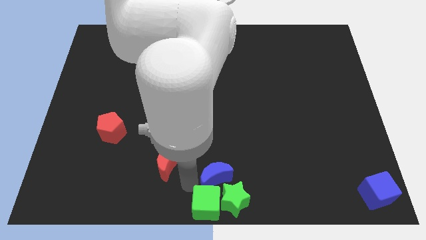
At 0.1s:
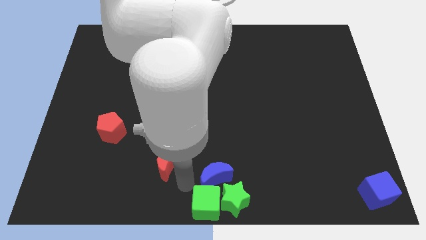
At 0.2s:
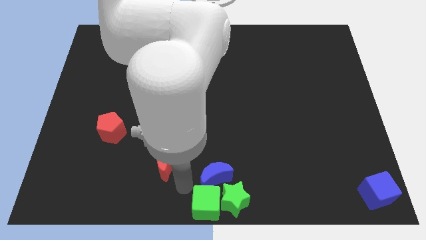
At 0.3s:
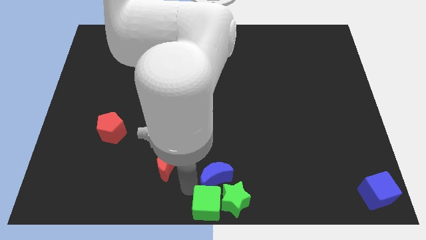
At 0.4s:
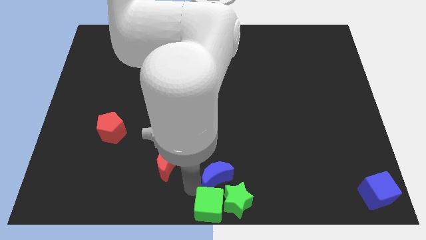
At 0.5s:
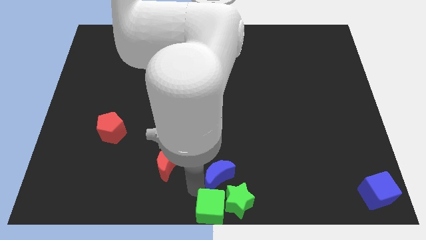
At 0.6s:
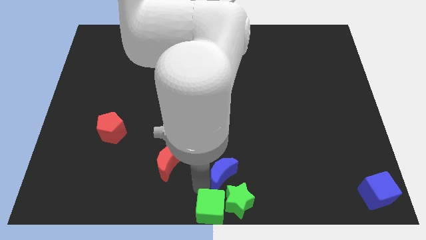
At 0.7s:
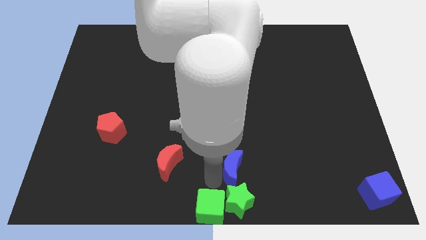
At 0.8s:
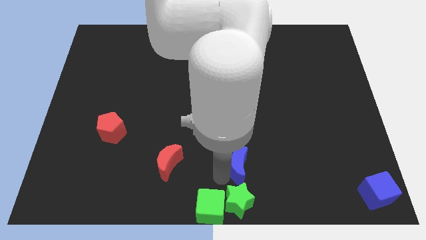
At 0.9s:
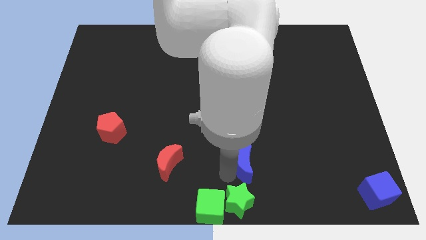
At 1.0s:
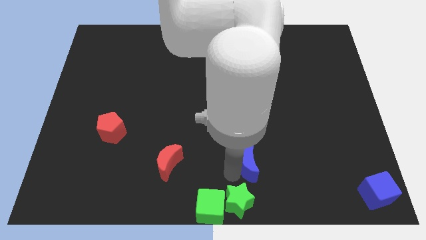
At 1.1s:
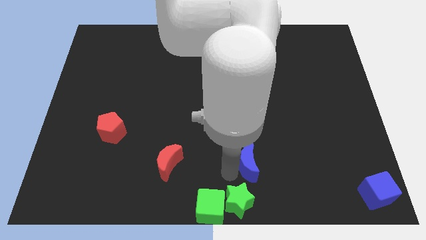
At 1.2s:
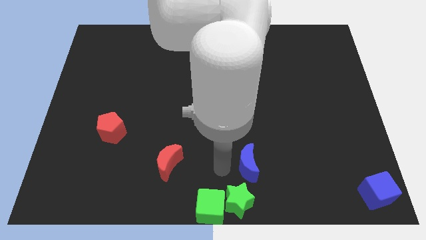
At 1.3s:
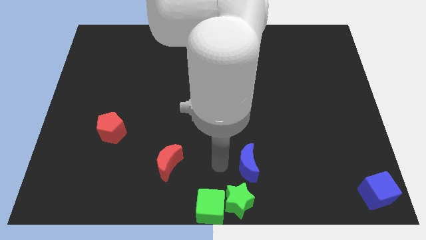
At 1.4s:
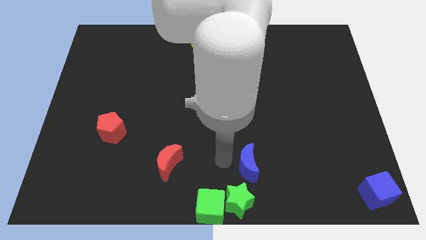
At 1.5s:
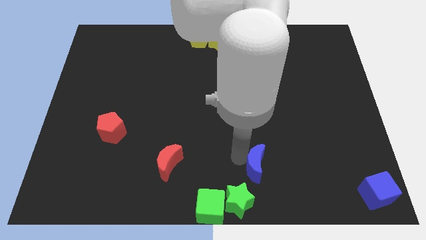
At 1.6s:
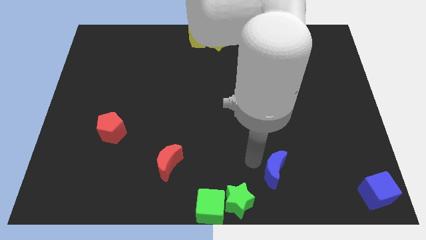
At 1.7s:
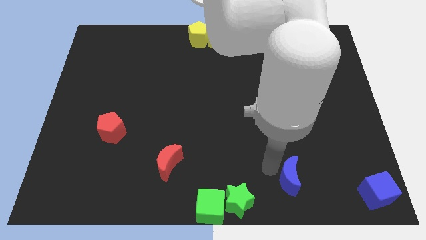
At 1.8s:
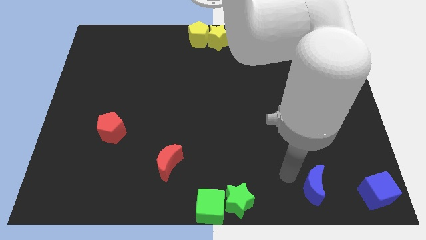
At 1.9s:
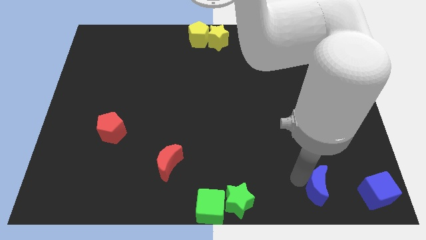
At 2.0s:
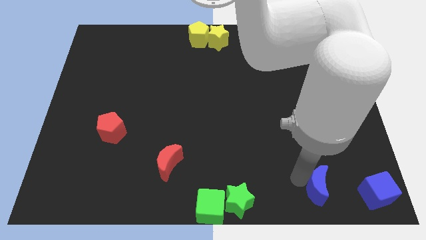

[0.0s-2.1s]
slide blue moon towards bottom right

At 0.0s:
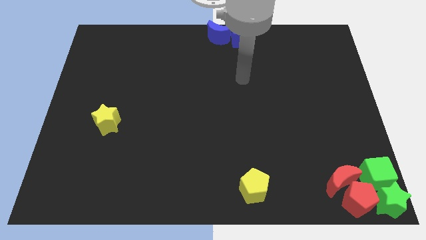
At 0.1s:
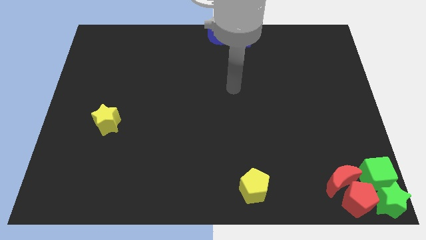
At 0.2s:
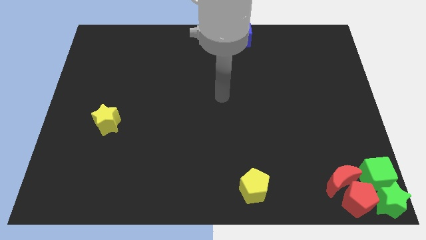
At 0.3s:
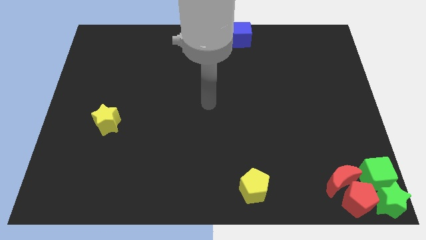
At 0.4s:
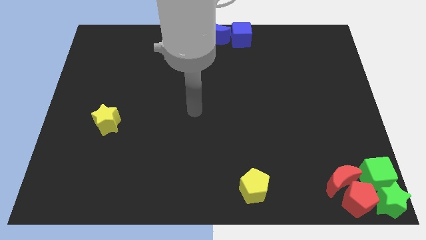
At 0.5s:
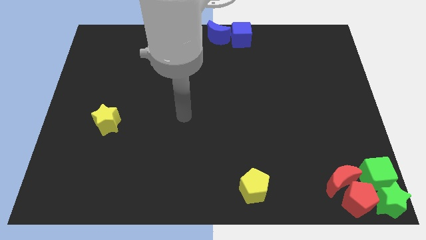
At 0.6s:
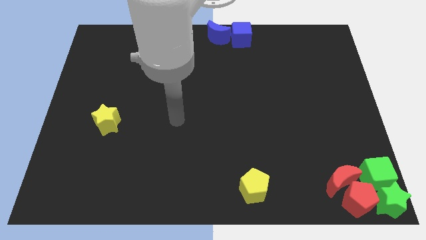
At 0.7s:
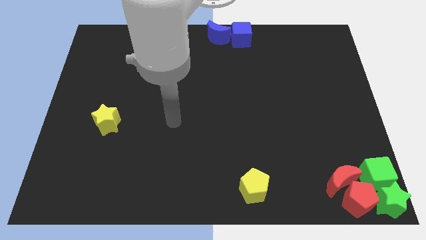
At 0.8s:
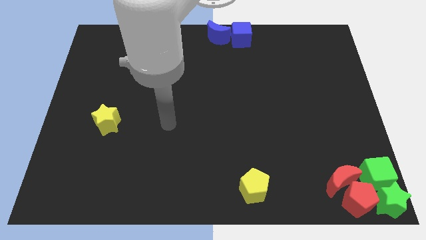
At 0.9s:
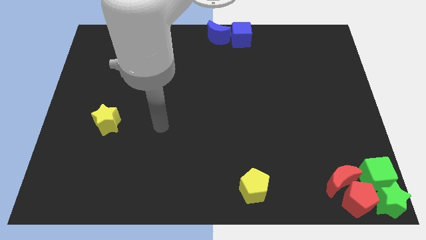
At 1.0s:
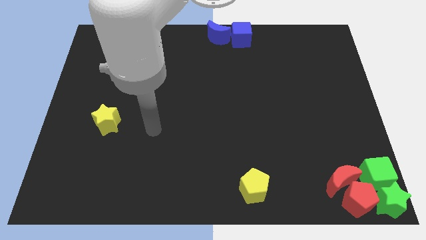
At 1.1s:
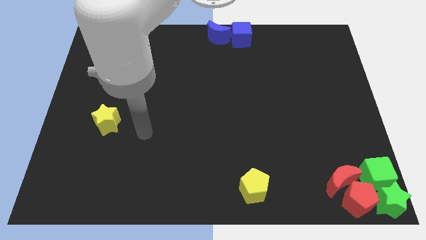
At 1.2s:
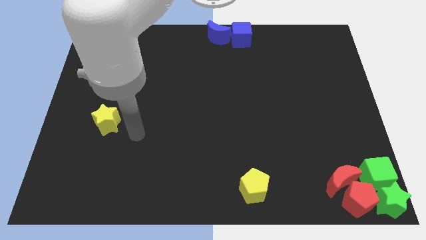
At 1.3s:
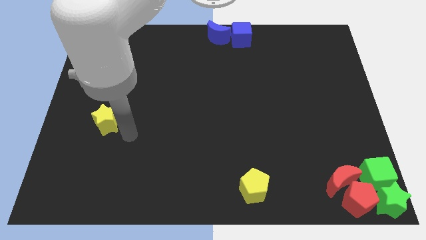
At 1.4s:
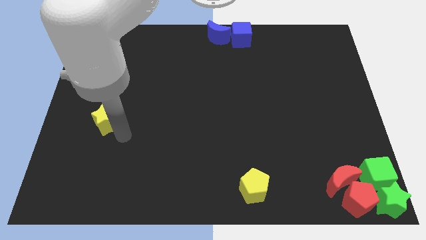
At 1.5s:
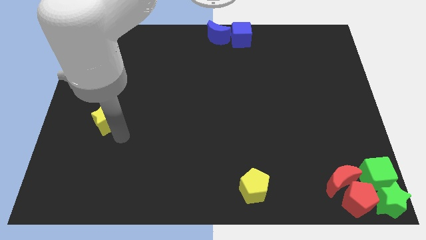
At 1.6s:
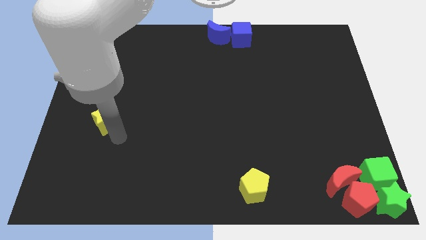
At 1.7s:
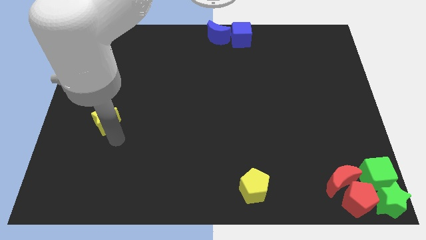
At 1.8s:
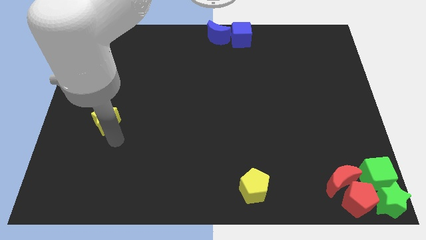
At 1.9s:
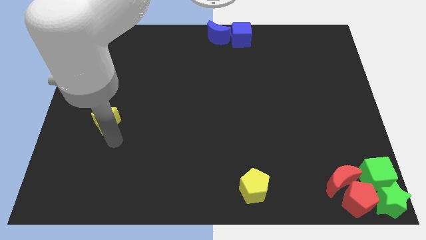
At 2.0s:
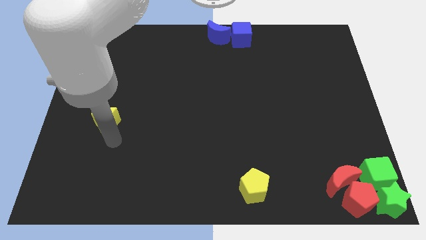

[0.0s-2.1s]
move your arm below to the yellow star

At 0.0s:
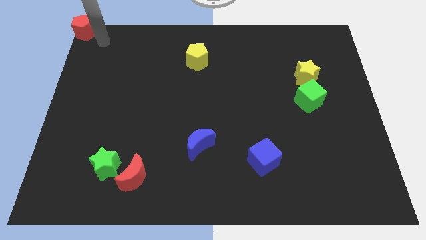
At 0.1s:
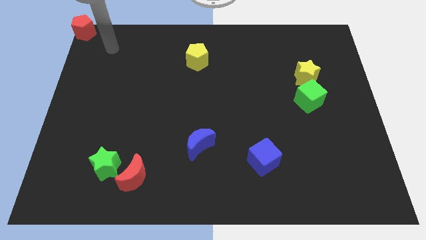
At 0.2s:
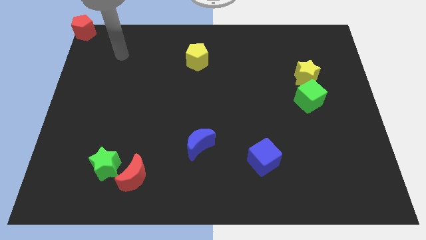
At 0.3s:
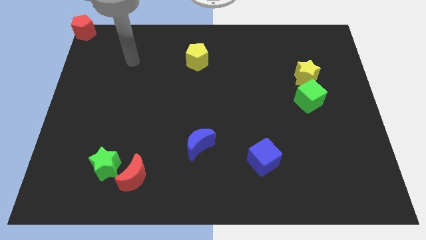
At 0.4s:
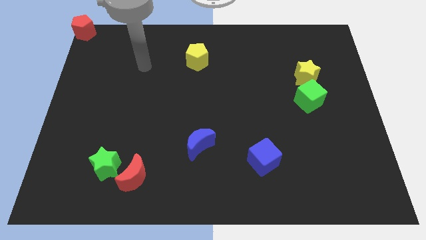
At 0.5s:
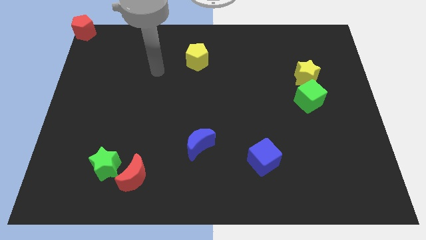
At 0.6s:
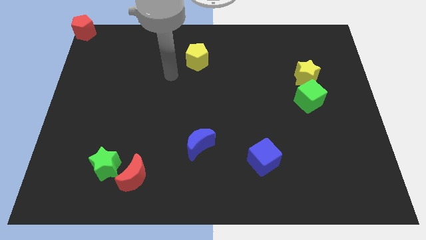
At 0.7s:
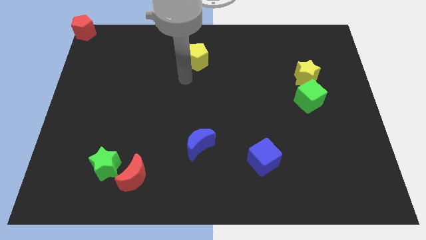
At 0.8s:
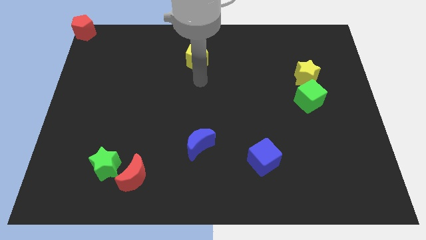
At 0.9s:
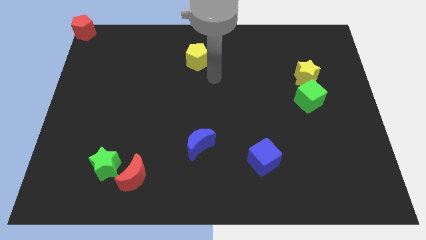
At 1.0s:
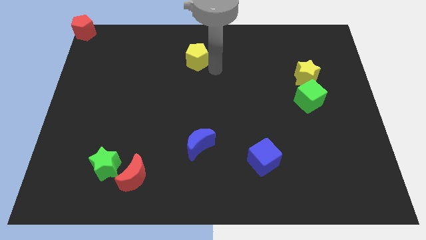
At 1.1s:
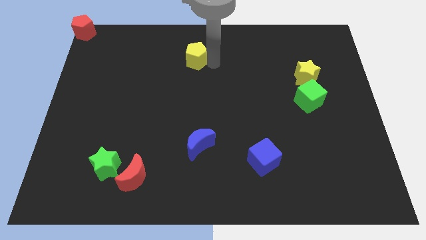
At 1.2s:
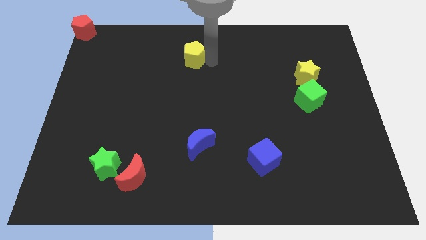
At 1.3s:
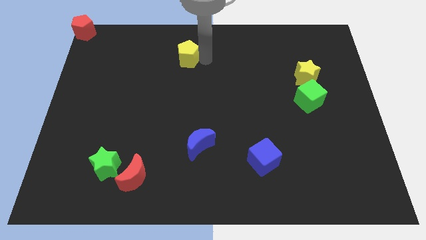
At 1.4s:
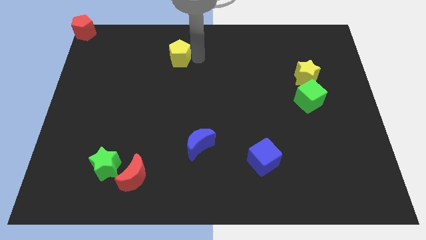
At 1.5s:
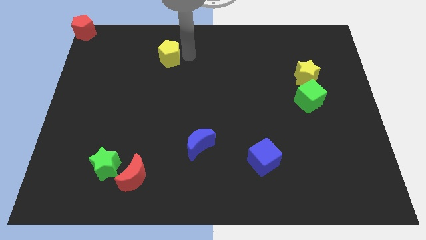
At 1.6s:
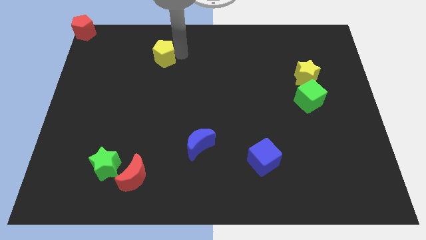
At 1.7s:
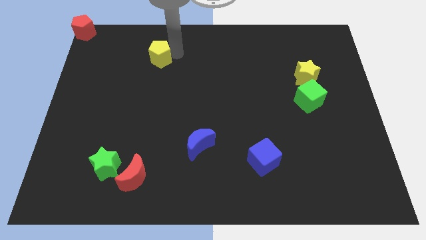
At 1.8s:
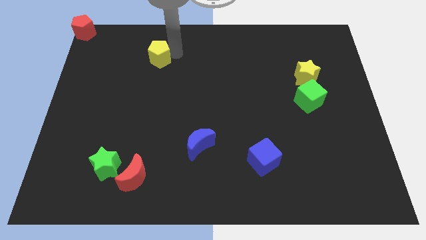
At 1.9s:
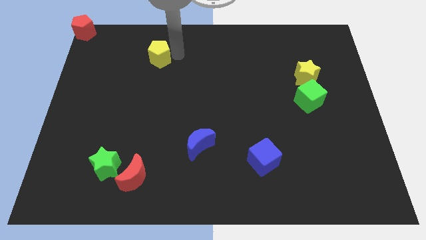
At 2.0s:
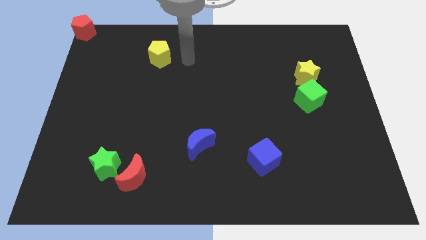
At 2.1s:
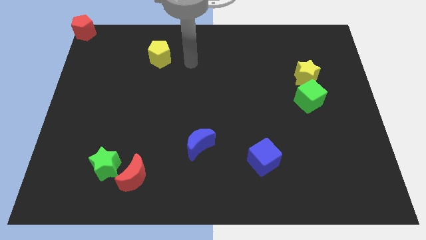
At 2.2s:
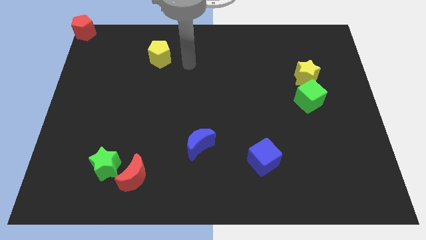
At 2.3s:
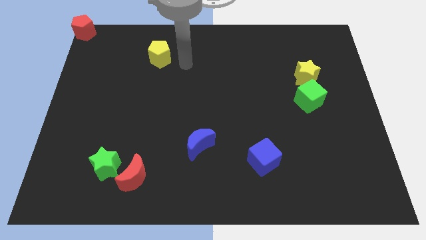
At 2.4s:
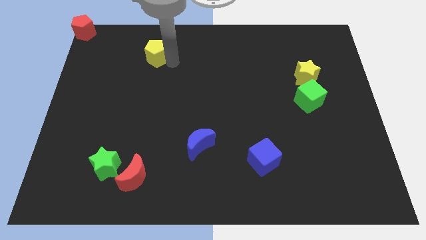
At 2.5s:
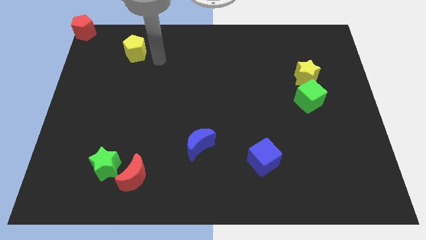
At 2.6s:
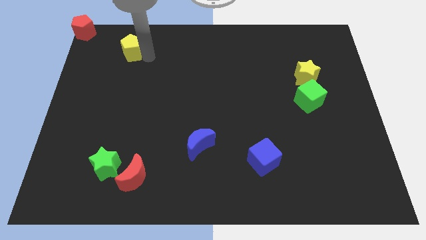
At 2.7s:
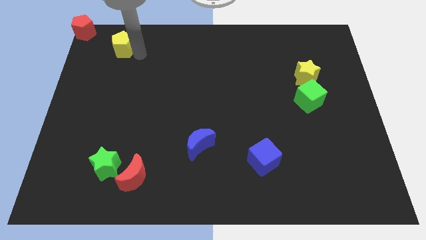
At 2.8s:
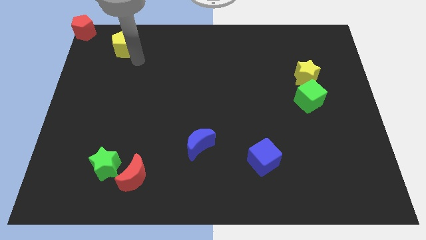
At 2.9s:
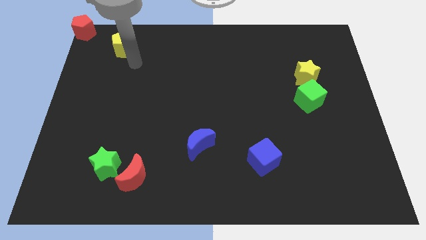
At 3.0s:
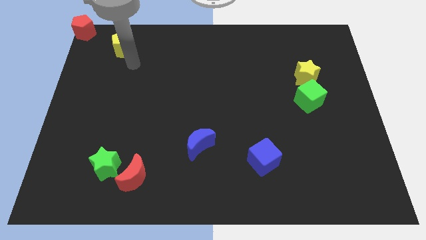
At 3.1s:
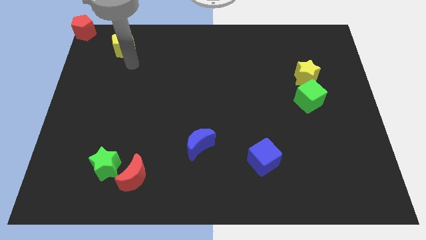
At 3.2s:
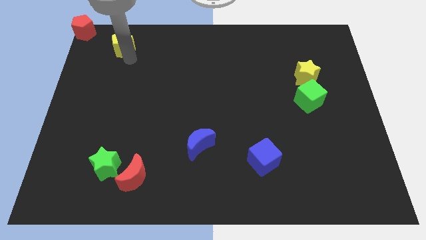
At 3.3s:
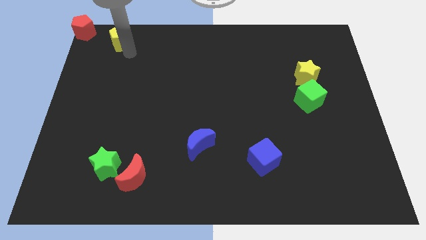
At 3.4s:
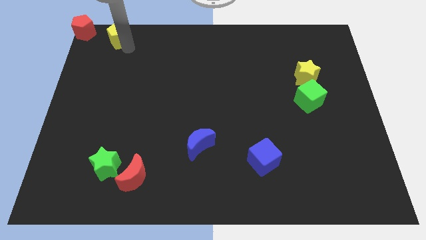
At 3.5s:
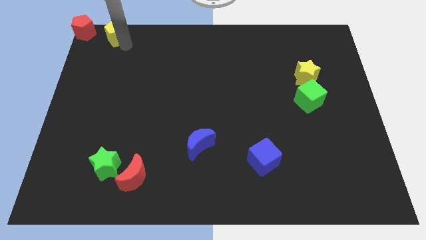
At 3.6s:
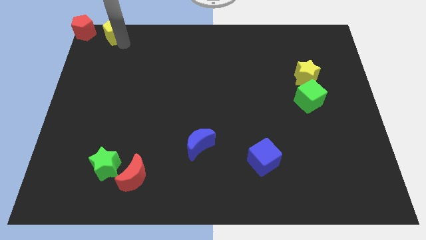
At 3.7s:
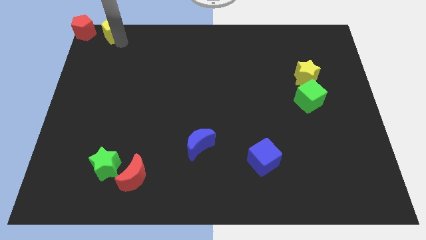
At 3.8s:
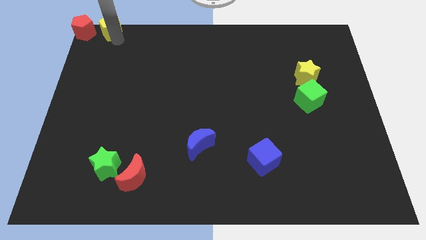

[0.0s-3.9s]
slide the yellow pentagon parallel right to the red pentagon

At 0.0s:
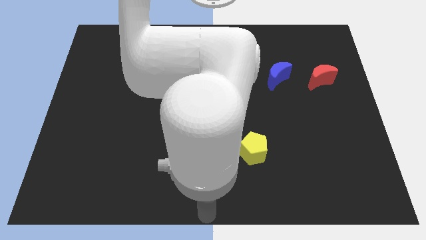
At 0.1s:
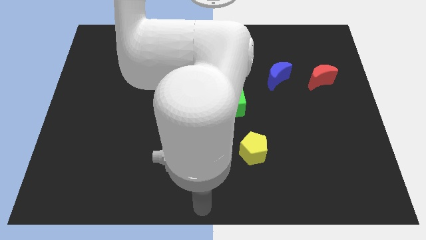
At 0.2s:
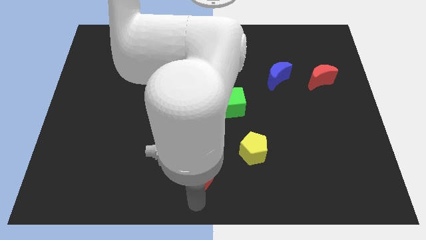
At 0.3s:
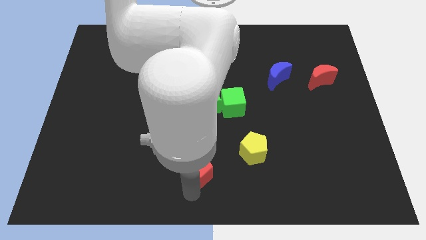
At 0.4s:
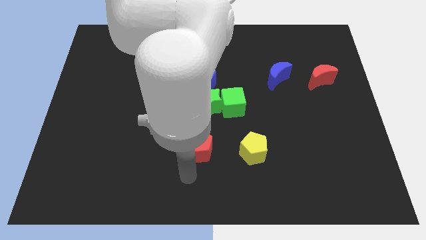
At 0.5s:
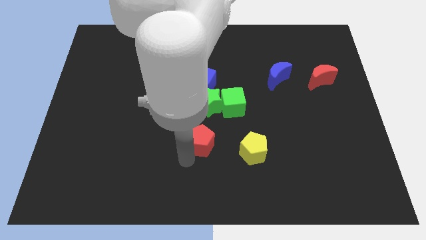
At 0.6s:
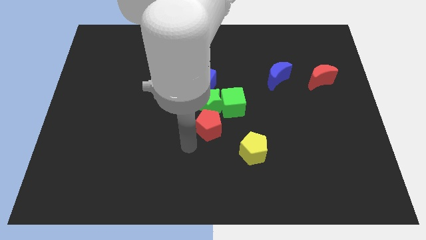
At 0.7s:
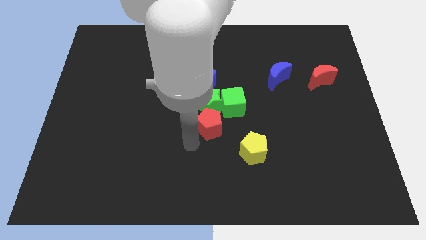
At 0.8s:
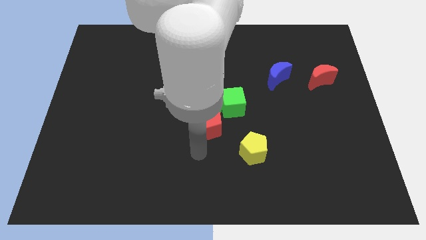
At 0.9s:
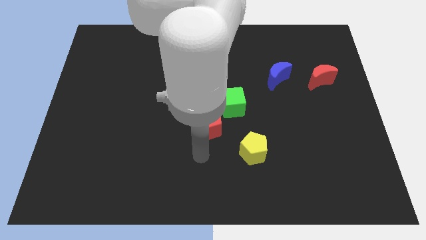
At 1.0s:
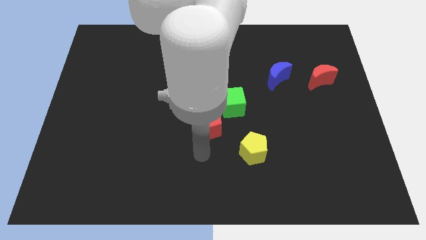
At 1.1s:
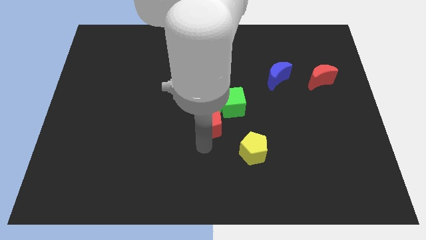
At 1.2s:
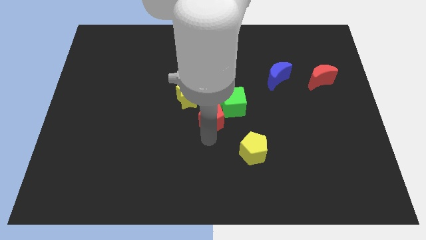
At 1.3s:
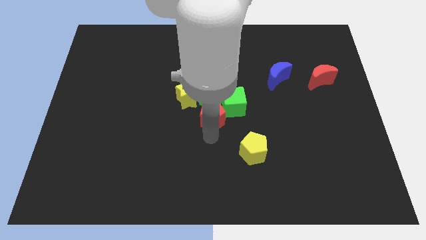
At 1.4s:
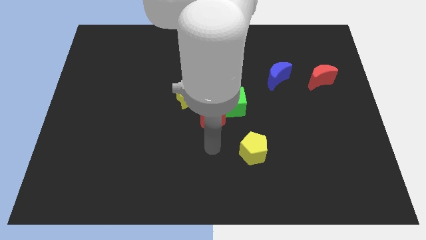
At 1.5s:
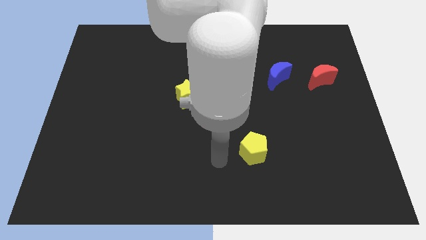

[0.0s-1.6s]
push red pentagon towards green star
